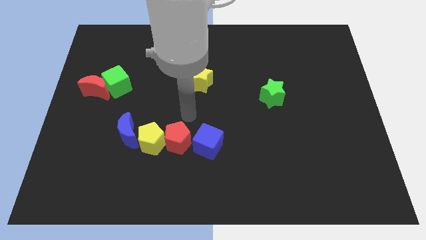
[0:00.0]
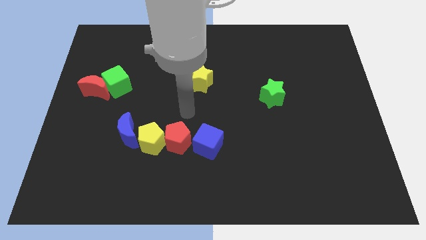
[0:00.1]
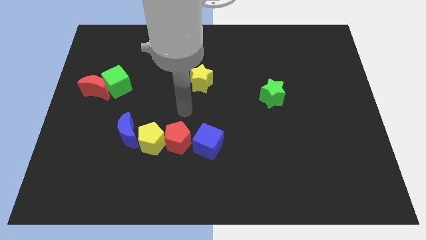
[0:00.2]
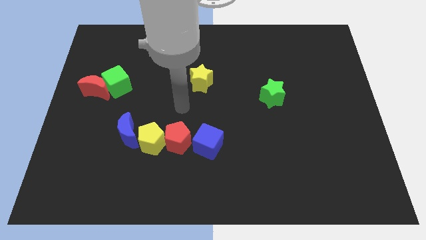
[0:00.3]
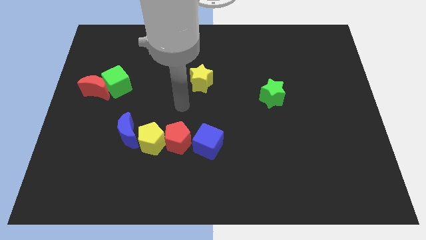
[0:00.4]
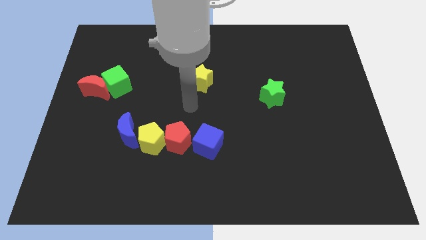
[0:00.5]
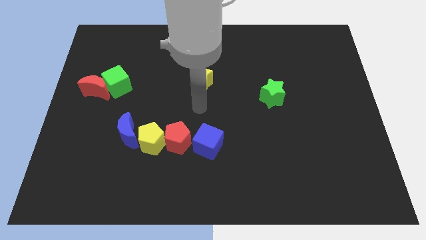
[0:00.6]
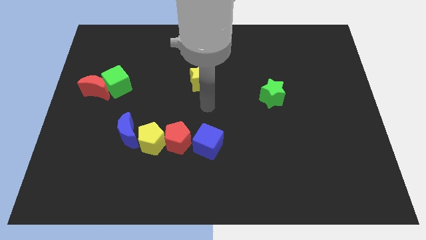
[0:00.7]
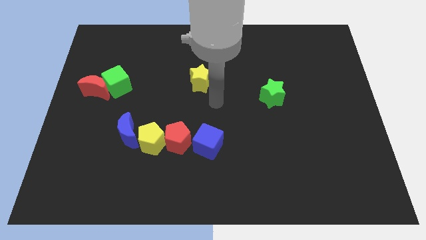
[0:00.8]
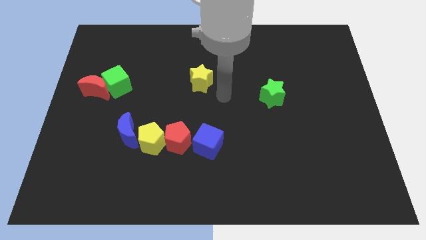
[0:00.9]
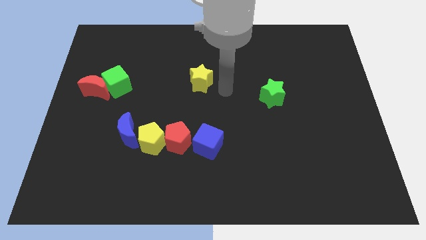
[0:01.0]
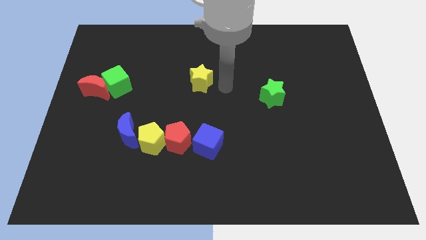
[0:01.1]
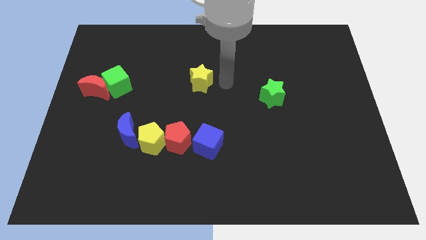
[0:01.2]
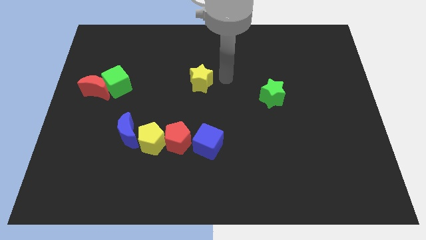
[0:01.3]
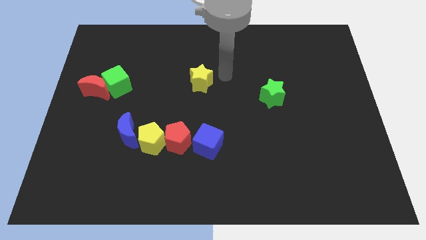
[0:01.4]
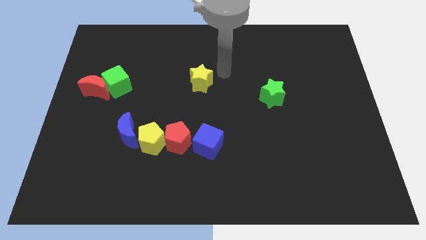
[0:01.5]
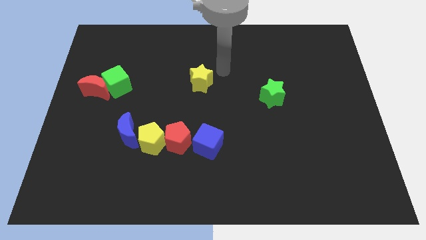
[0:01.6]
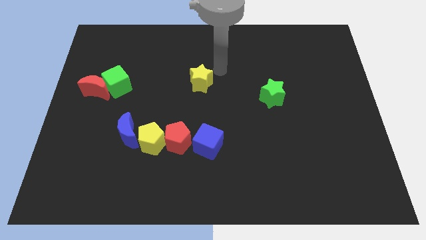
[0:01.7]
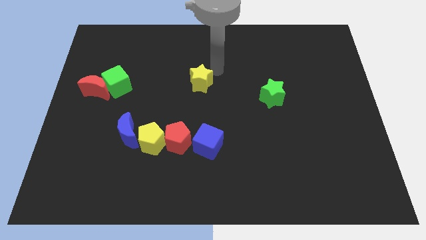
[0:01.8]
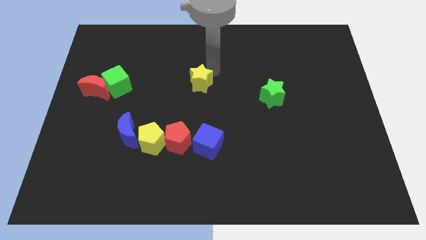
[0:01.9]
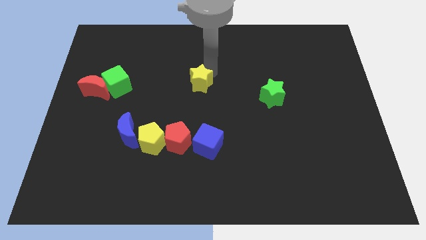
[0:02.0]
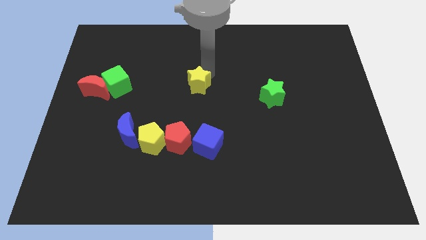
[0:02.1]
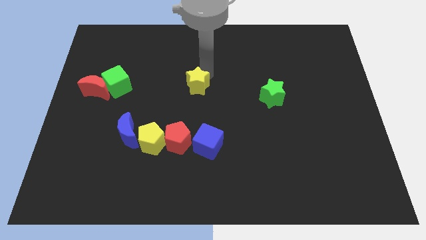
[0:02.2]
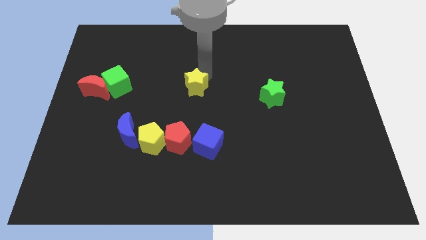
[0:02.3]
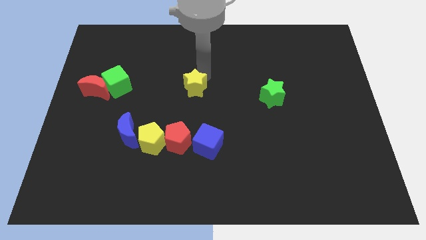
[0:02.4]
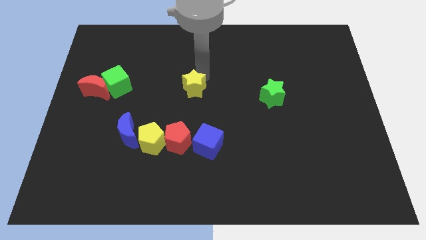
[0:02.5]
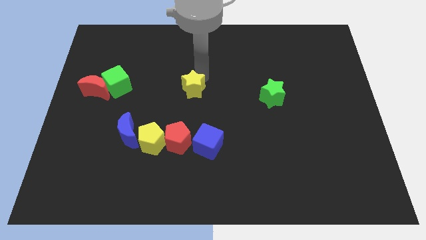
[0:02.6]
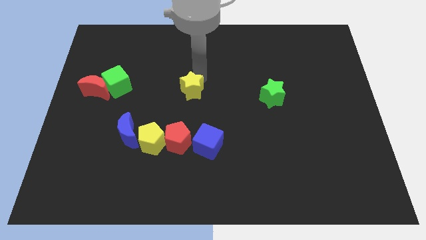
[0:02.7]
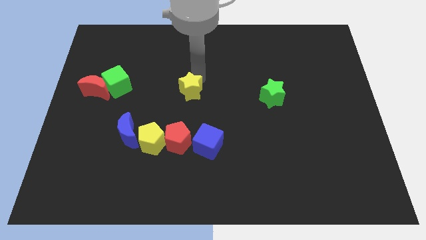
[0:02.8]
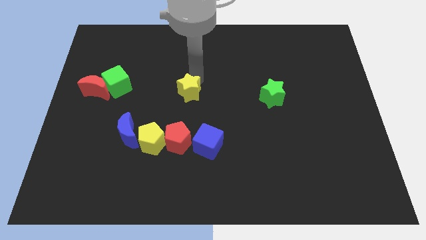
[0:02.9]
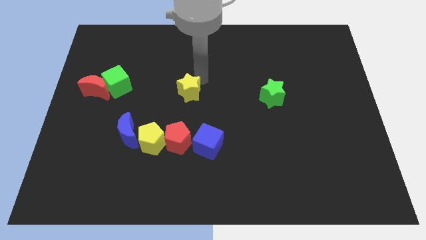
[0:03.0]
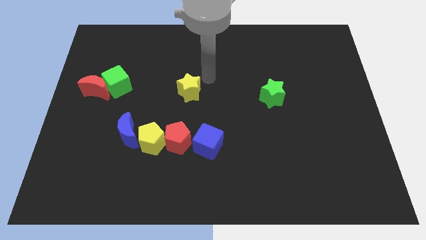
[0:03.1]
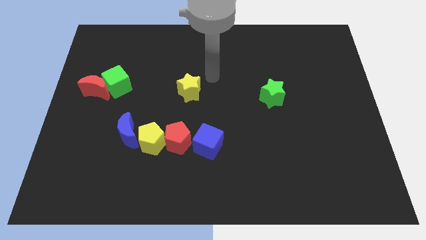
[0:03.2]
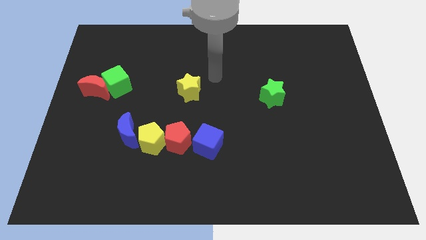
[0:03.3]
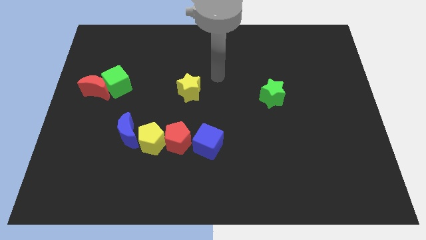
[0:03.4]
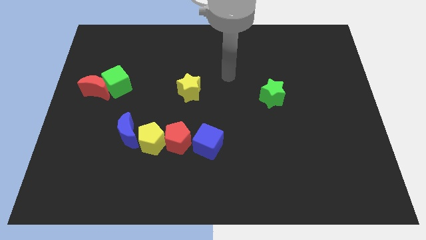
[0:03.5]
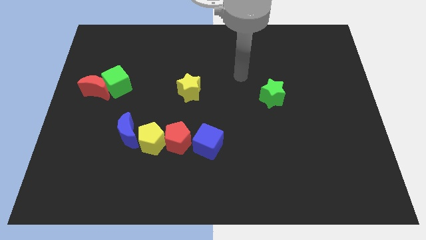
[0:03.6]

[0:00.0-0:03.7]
slightly push the yellow star towards the red pentagon

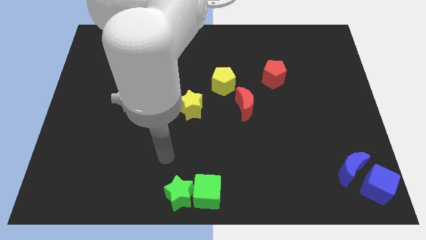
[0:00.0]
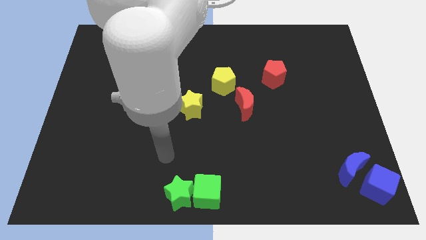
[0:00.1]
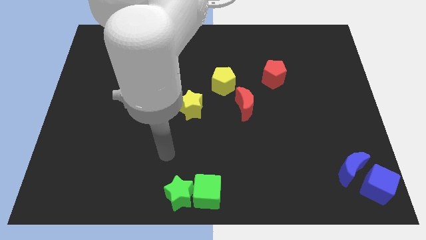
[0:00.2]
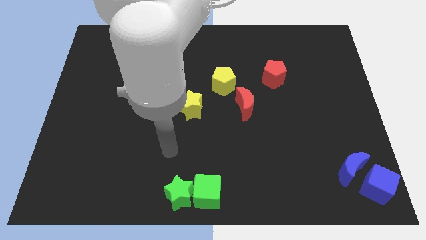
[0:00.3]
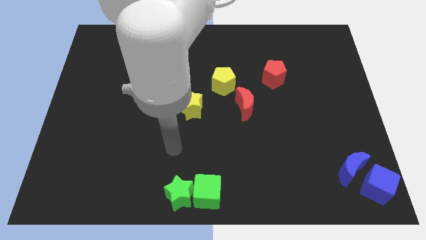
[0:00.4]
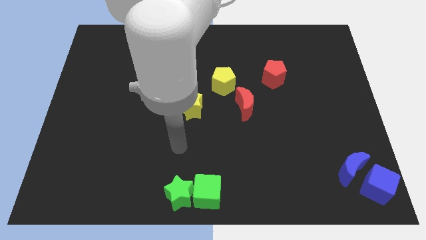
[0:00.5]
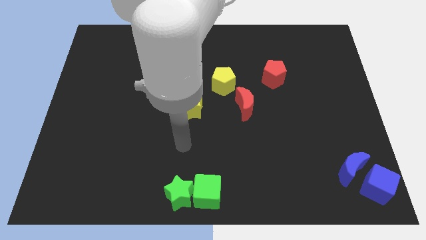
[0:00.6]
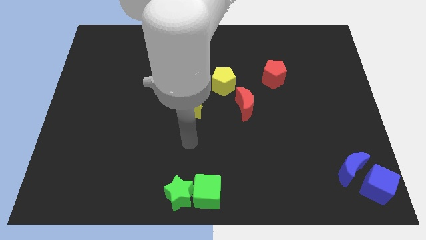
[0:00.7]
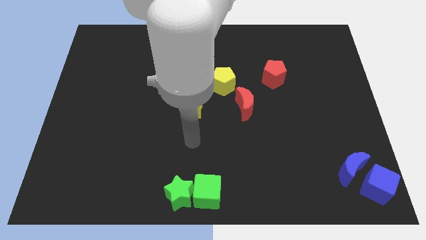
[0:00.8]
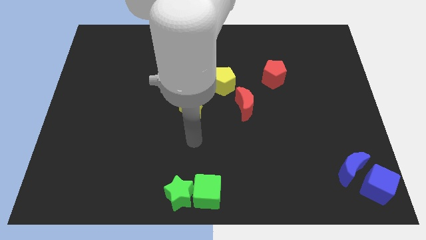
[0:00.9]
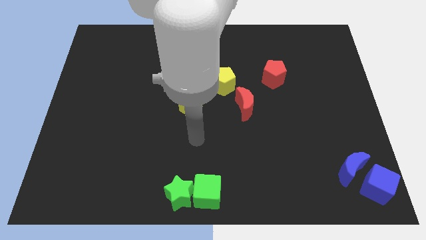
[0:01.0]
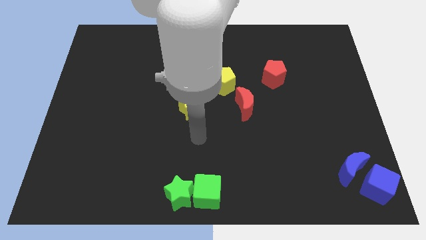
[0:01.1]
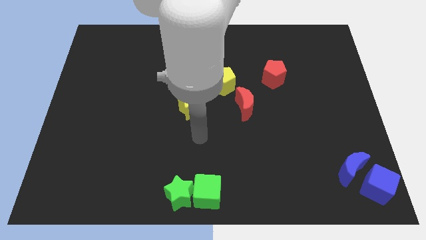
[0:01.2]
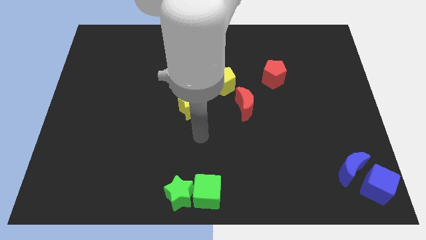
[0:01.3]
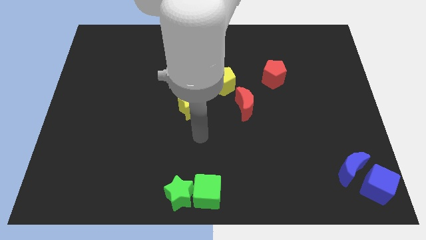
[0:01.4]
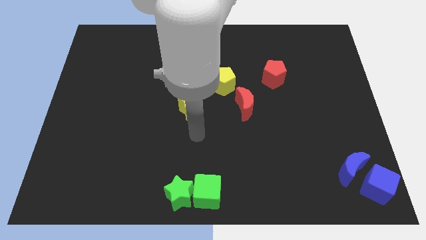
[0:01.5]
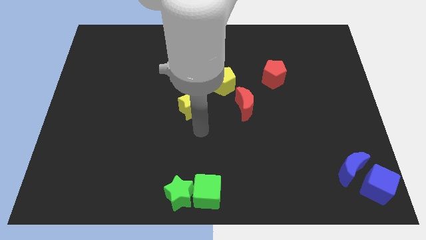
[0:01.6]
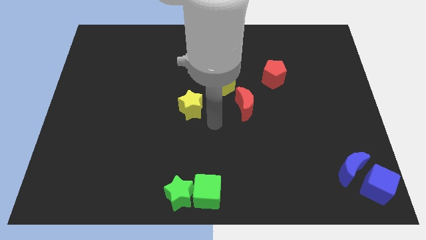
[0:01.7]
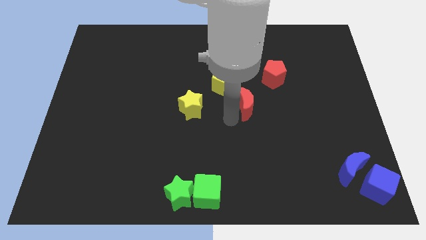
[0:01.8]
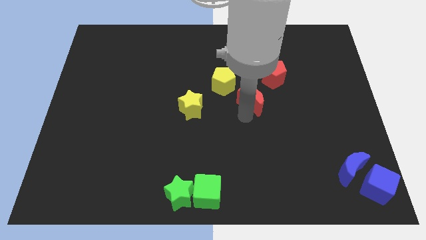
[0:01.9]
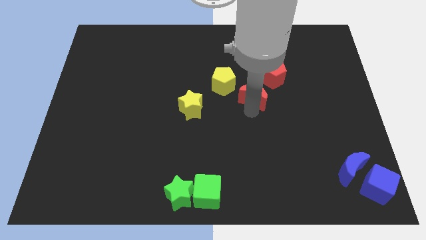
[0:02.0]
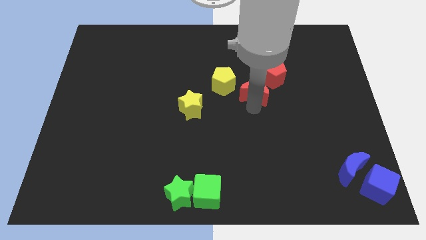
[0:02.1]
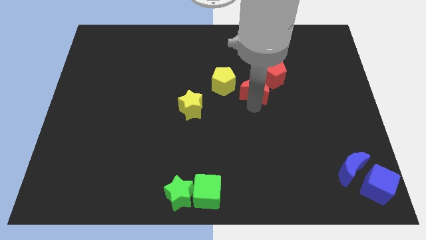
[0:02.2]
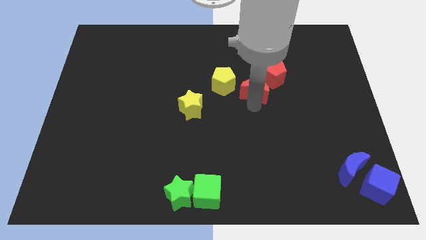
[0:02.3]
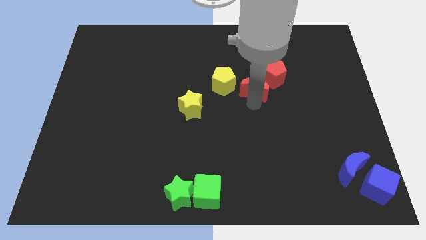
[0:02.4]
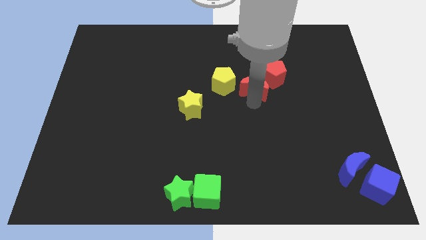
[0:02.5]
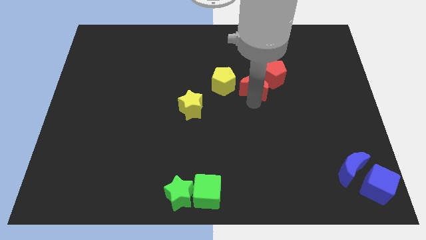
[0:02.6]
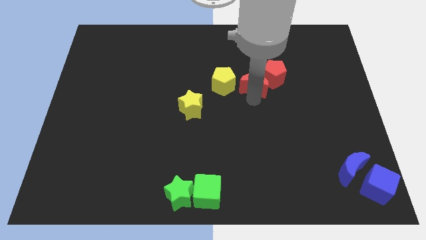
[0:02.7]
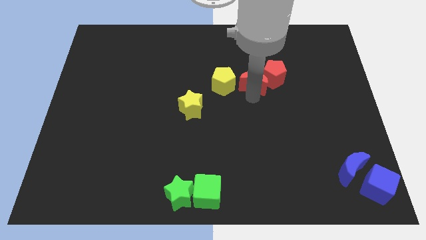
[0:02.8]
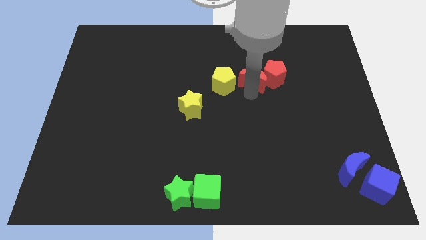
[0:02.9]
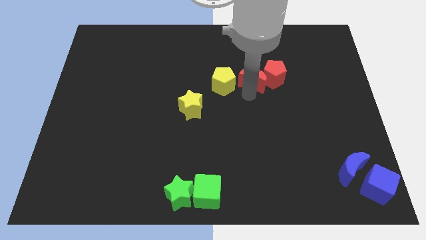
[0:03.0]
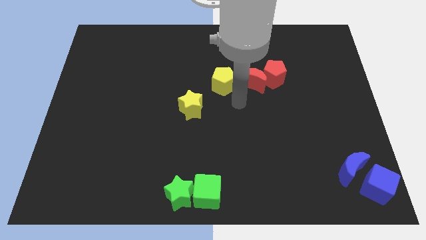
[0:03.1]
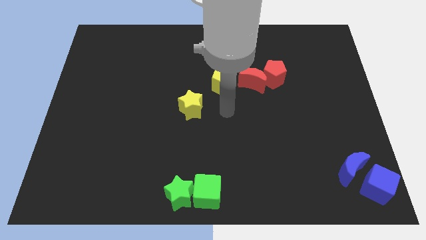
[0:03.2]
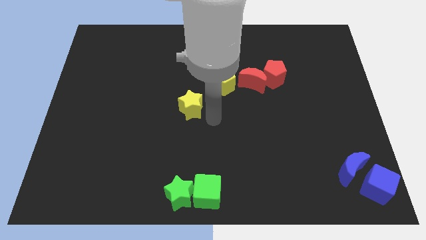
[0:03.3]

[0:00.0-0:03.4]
push the red crescent to the right of the yellow pentagon

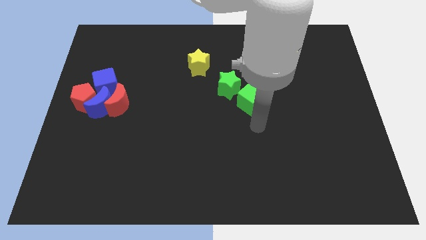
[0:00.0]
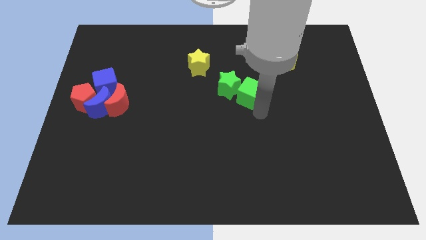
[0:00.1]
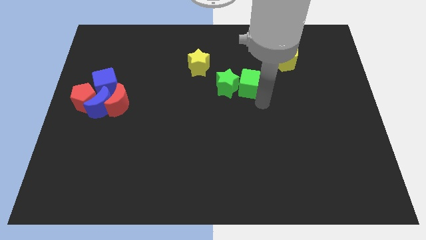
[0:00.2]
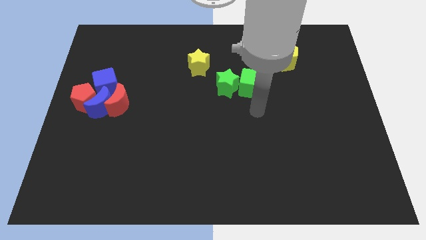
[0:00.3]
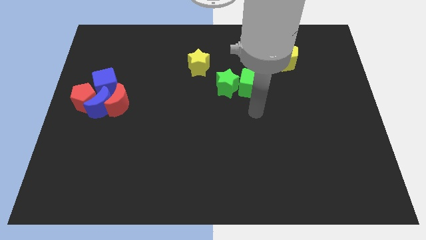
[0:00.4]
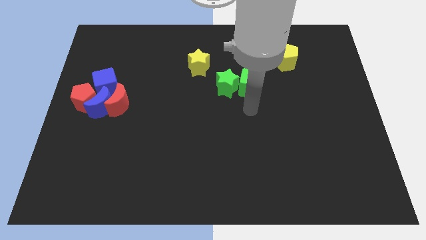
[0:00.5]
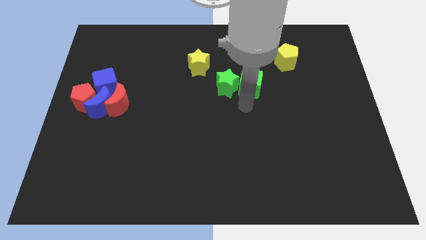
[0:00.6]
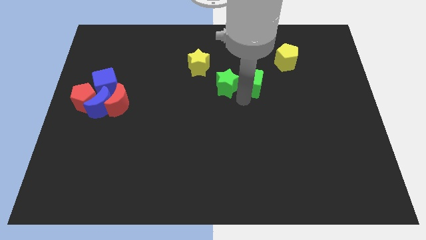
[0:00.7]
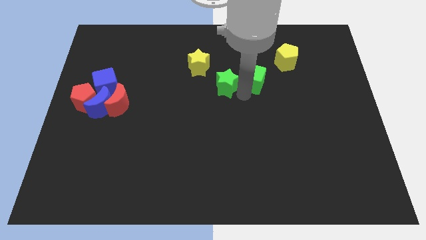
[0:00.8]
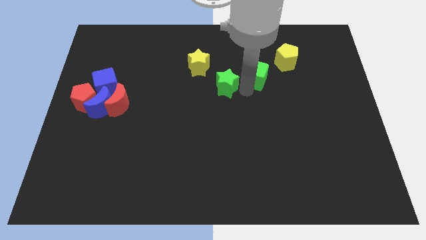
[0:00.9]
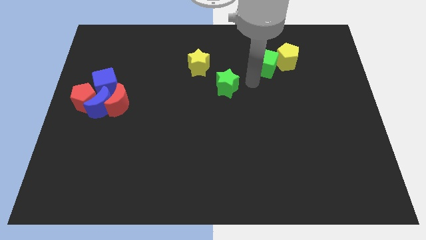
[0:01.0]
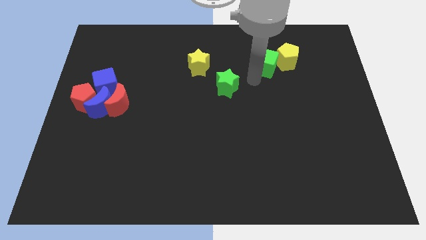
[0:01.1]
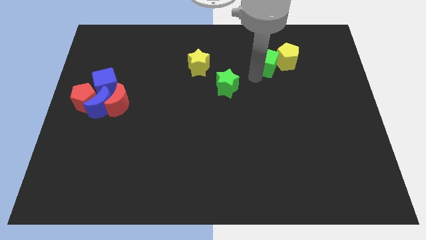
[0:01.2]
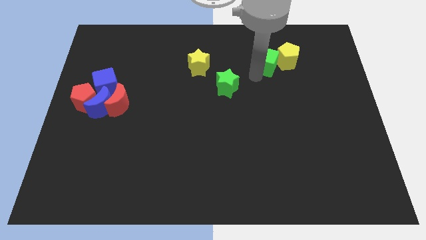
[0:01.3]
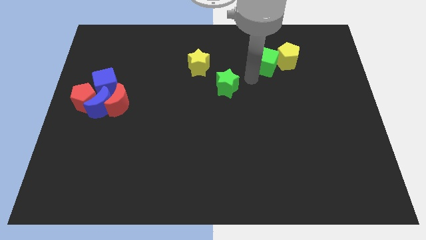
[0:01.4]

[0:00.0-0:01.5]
push the green cube into the left of the yellow pentagon

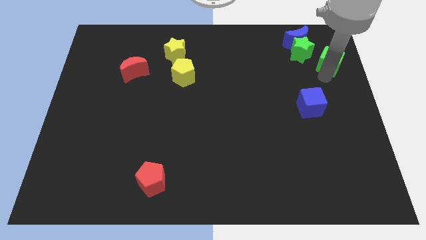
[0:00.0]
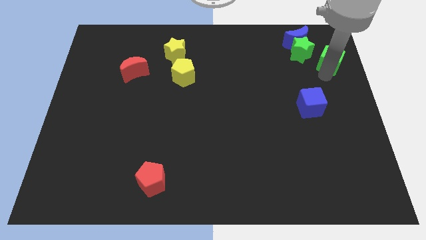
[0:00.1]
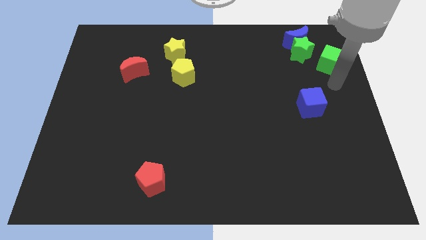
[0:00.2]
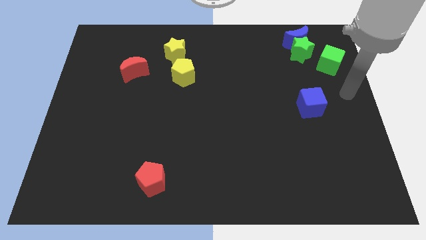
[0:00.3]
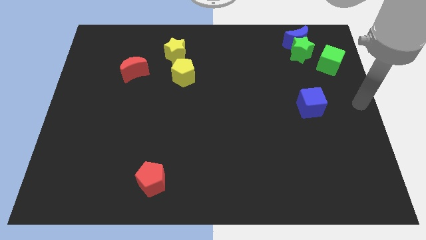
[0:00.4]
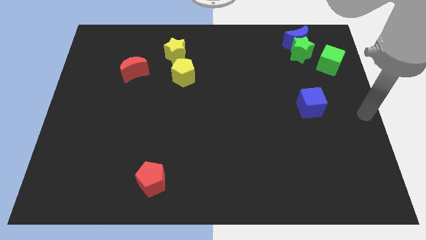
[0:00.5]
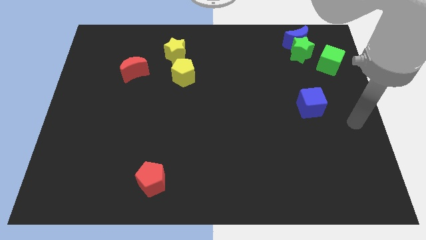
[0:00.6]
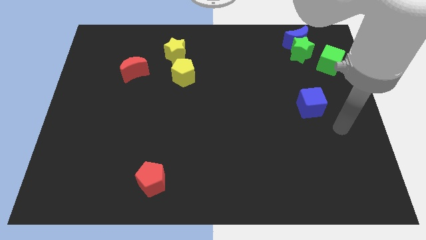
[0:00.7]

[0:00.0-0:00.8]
move your arm away from the green cube
